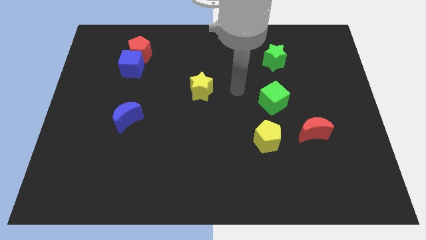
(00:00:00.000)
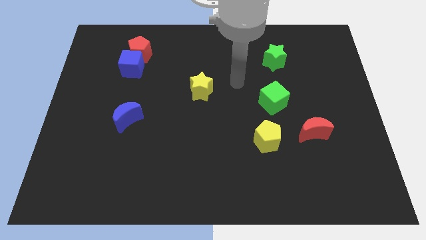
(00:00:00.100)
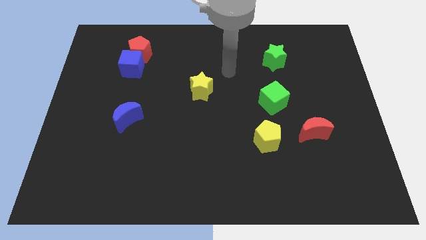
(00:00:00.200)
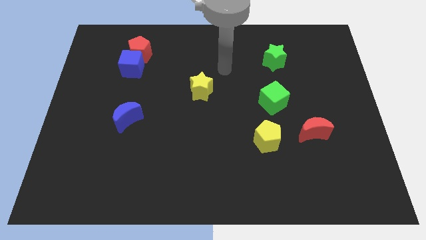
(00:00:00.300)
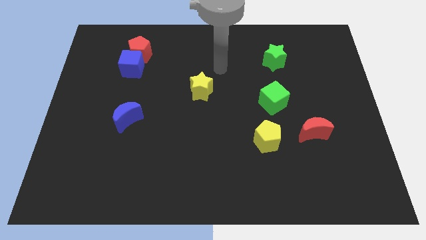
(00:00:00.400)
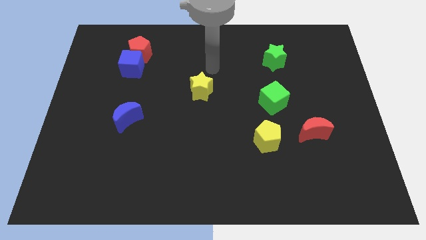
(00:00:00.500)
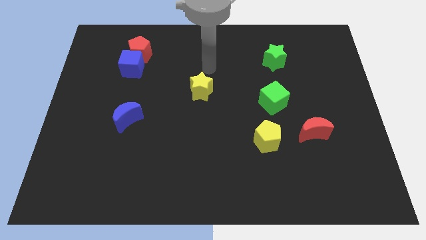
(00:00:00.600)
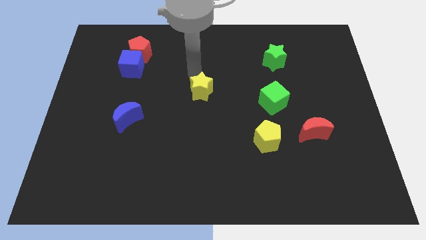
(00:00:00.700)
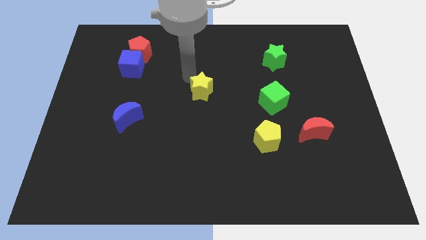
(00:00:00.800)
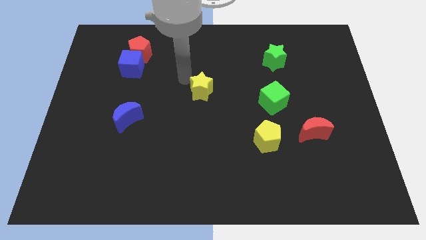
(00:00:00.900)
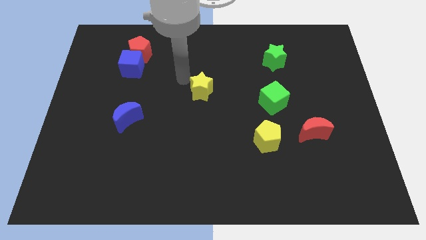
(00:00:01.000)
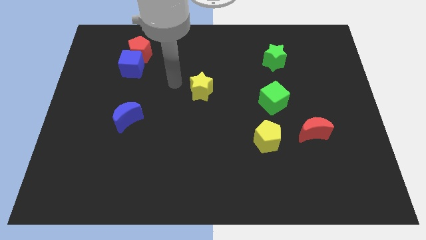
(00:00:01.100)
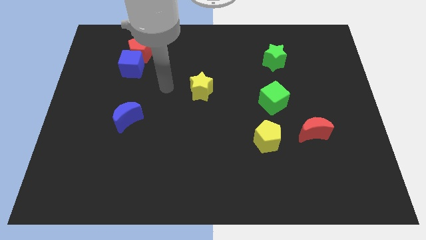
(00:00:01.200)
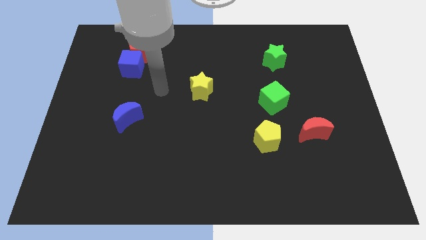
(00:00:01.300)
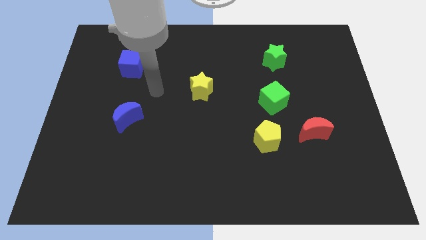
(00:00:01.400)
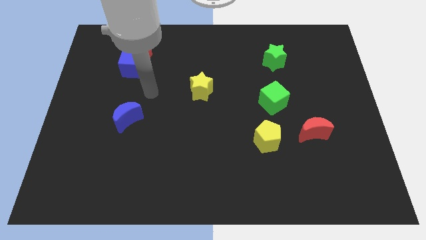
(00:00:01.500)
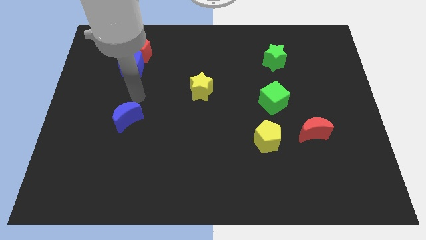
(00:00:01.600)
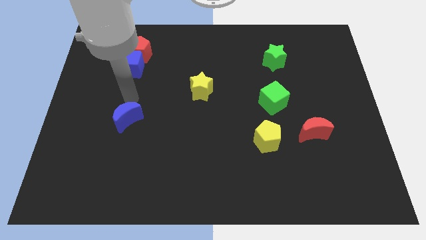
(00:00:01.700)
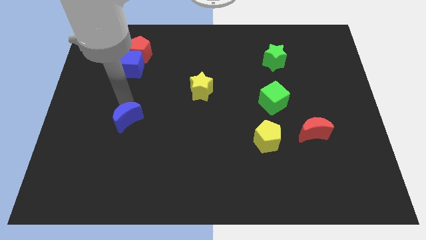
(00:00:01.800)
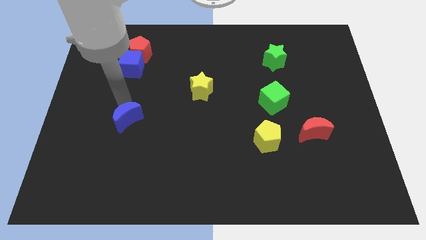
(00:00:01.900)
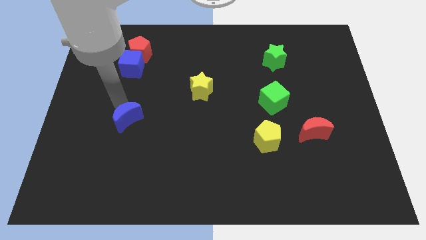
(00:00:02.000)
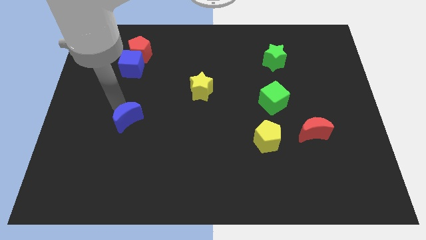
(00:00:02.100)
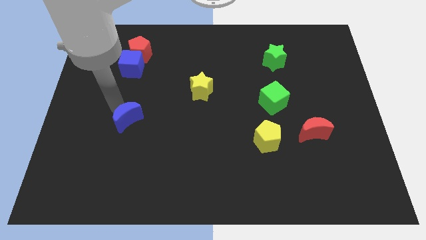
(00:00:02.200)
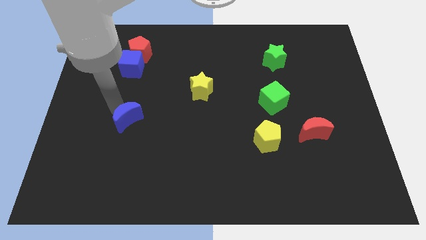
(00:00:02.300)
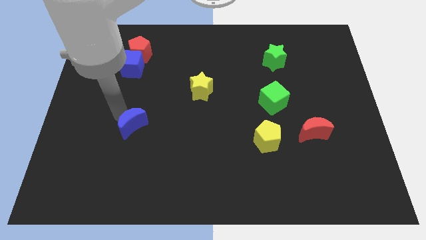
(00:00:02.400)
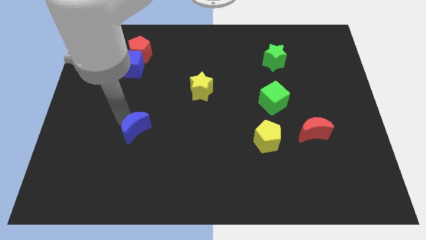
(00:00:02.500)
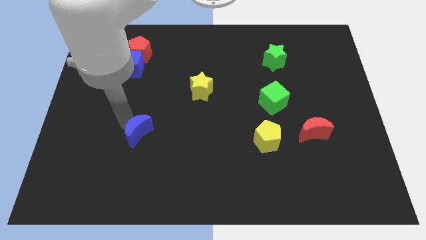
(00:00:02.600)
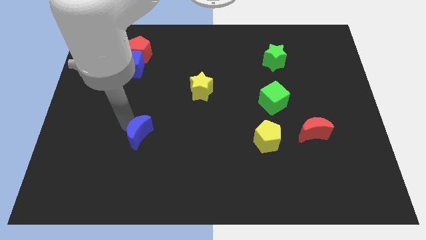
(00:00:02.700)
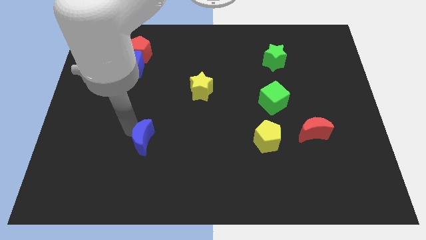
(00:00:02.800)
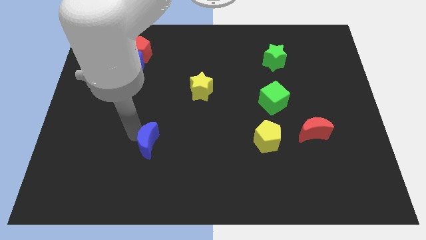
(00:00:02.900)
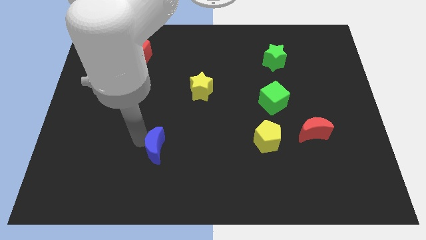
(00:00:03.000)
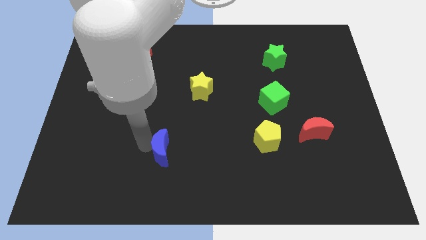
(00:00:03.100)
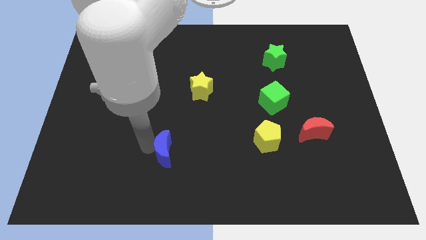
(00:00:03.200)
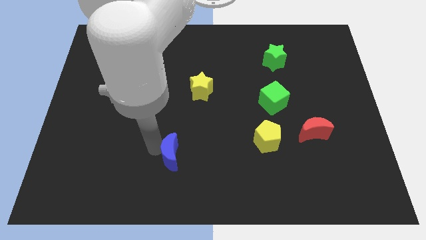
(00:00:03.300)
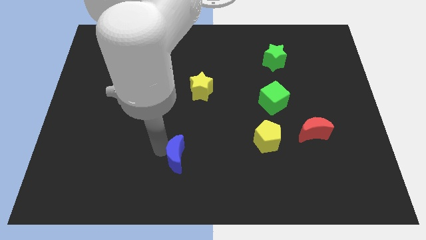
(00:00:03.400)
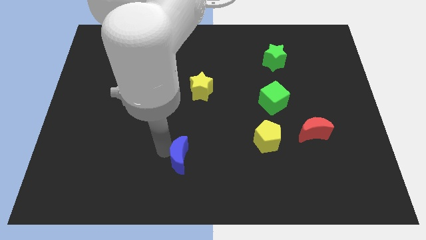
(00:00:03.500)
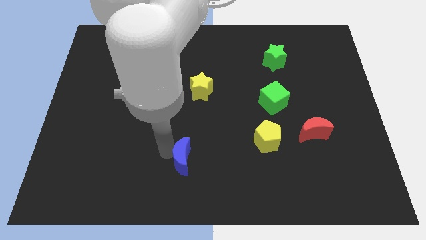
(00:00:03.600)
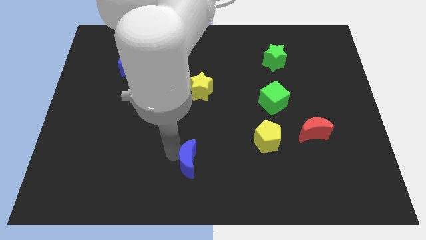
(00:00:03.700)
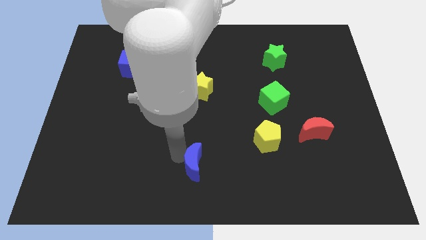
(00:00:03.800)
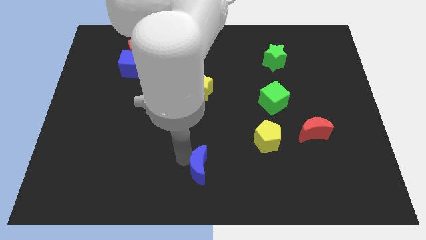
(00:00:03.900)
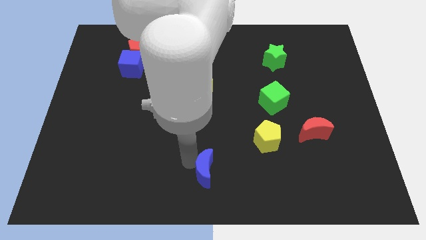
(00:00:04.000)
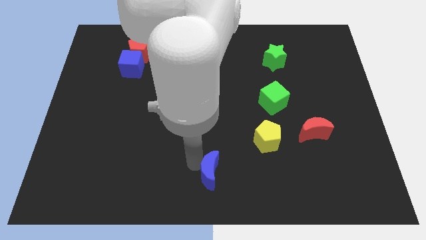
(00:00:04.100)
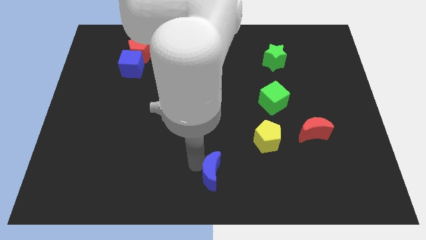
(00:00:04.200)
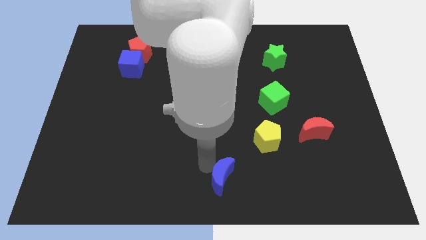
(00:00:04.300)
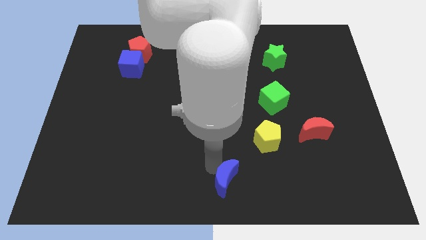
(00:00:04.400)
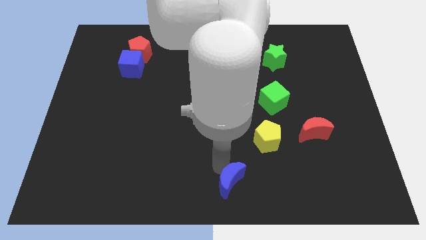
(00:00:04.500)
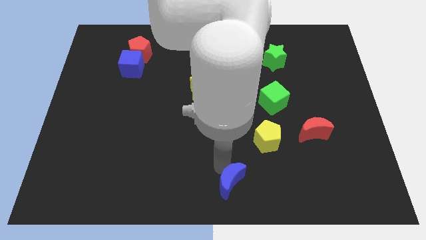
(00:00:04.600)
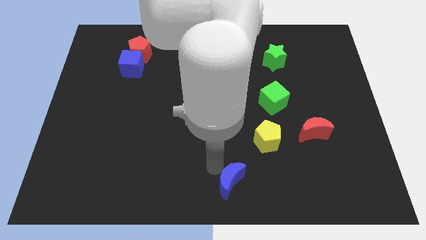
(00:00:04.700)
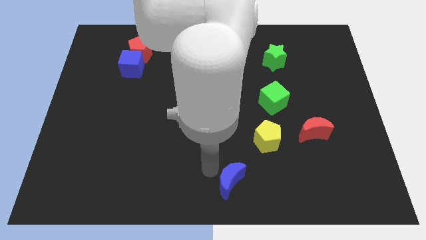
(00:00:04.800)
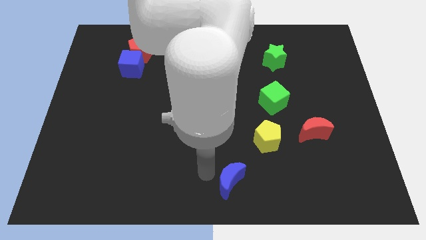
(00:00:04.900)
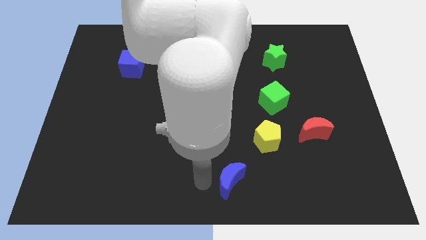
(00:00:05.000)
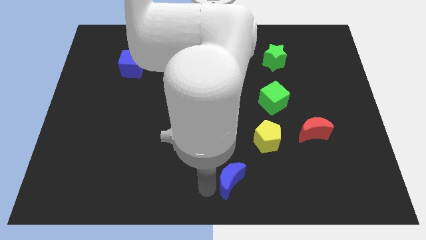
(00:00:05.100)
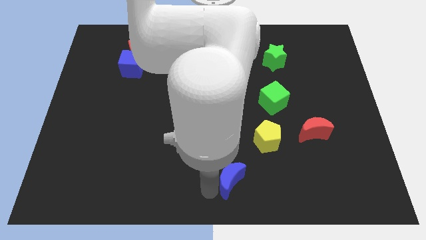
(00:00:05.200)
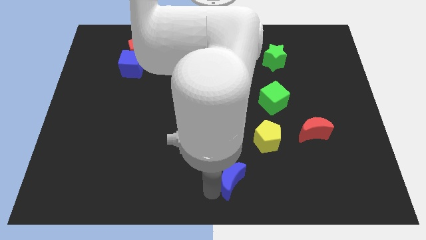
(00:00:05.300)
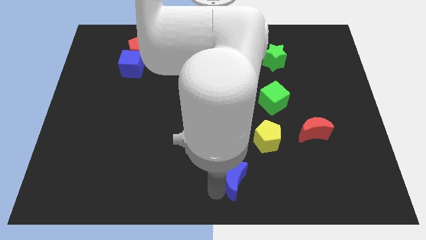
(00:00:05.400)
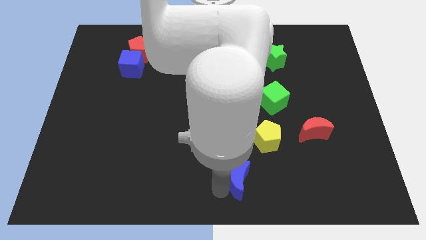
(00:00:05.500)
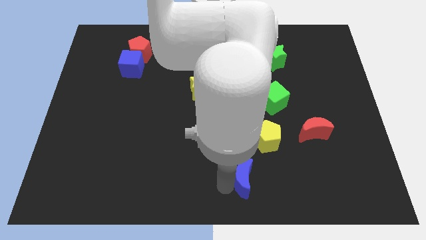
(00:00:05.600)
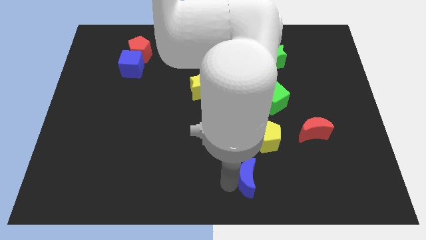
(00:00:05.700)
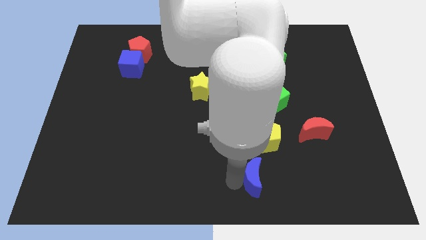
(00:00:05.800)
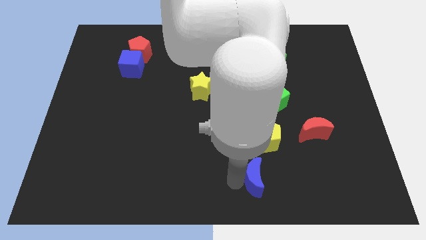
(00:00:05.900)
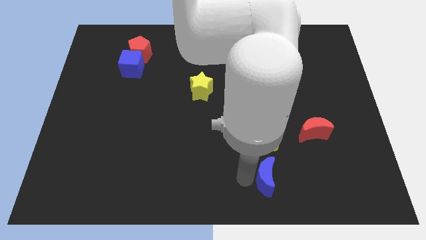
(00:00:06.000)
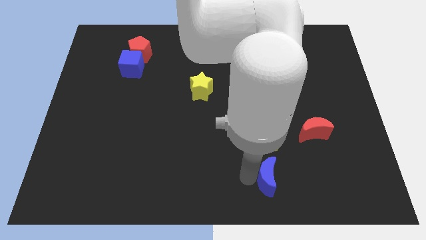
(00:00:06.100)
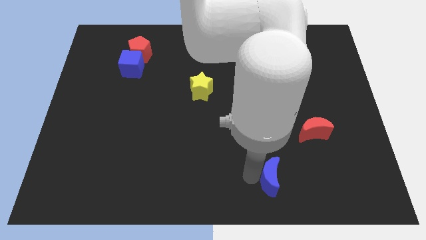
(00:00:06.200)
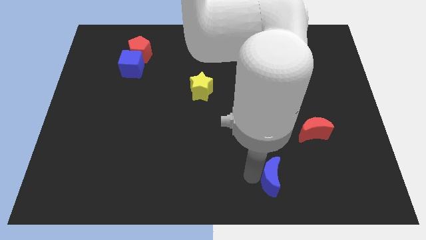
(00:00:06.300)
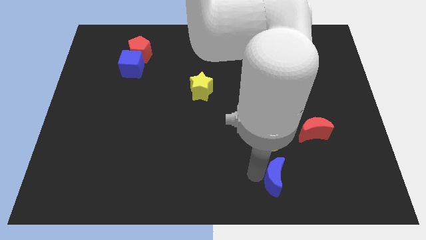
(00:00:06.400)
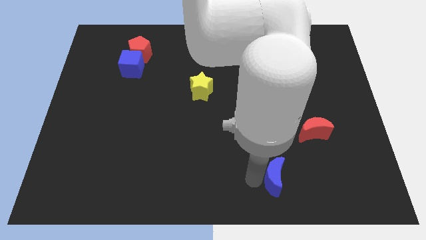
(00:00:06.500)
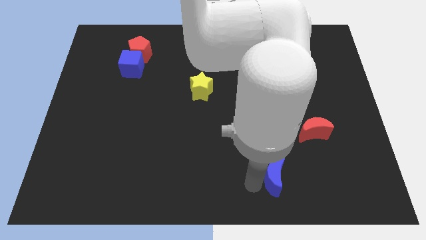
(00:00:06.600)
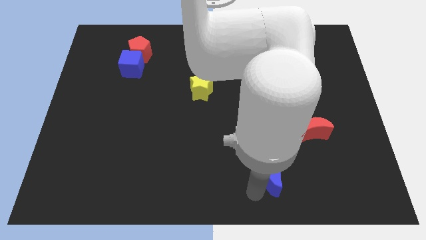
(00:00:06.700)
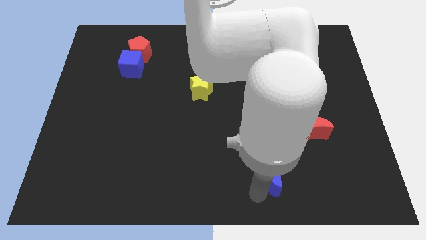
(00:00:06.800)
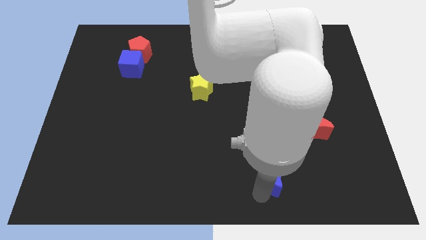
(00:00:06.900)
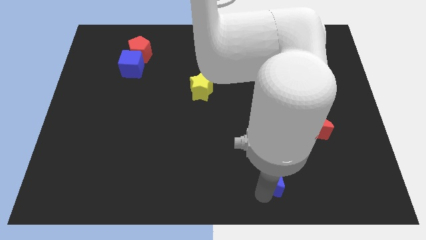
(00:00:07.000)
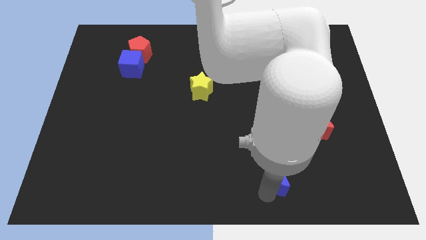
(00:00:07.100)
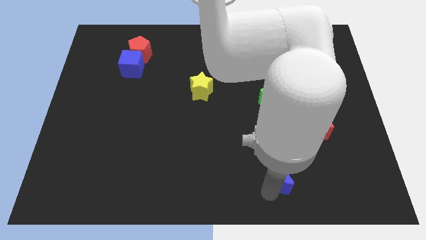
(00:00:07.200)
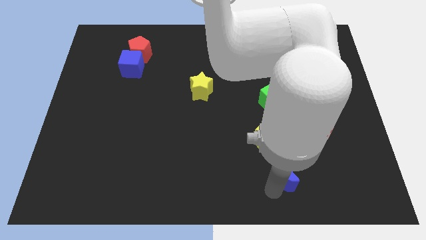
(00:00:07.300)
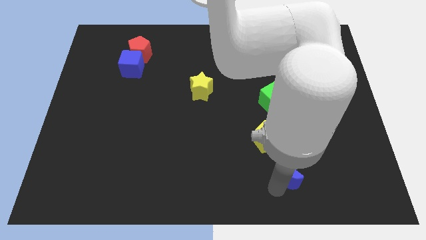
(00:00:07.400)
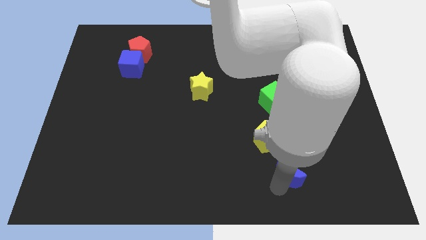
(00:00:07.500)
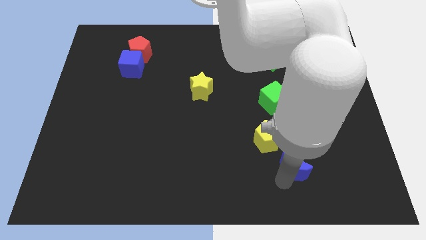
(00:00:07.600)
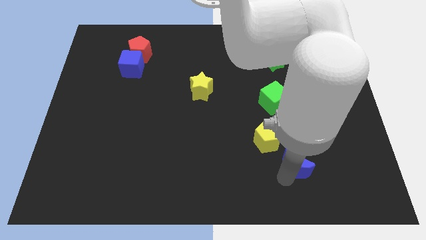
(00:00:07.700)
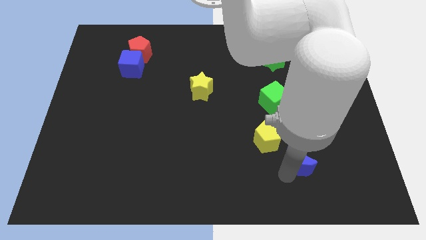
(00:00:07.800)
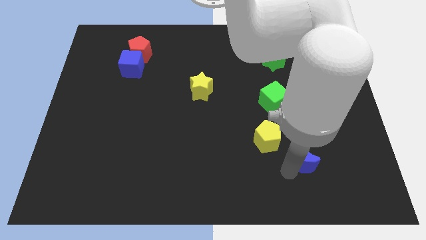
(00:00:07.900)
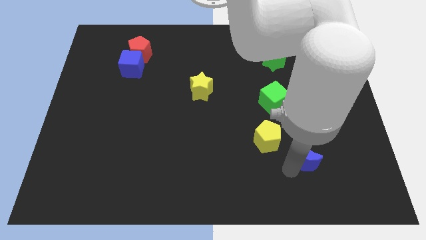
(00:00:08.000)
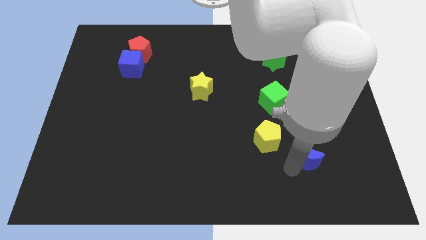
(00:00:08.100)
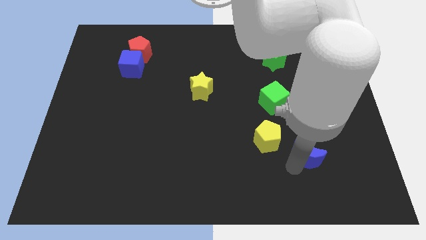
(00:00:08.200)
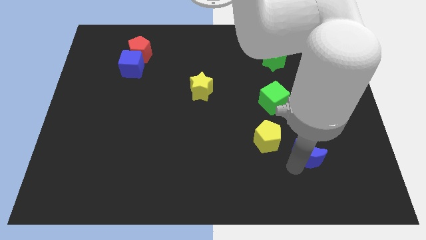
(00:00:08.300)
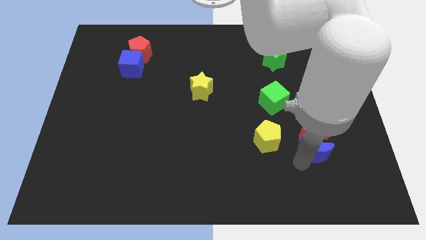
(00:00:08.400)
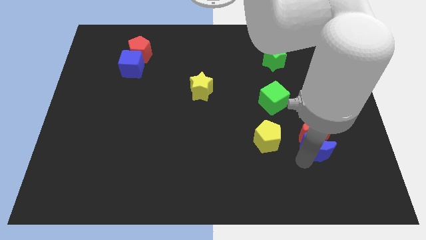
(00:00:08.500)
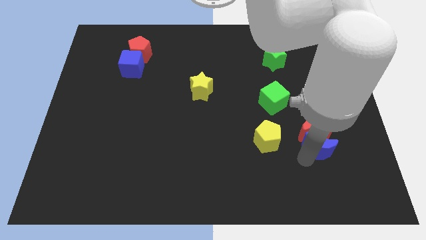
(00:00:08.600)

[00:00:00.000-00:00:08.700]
push the blue moon next to the red moon
